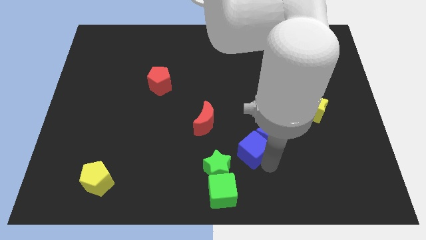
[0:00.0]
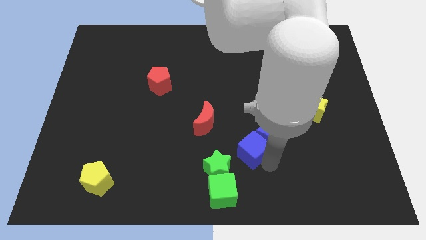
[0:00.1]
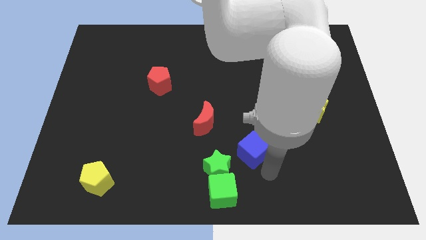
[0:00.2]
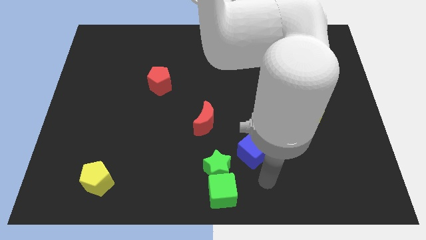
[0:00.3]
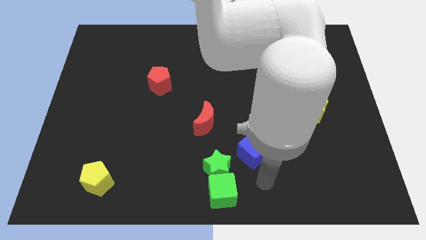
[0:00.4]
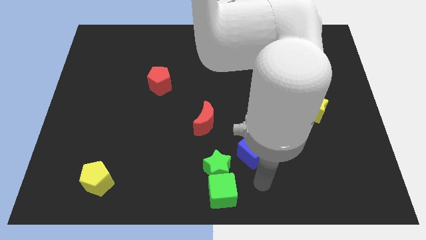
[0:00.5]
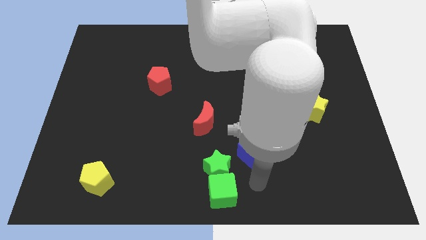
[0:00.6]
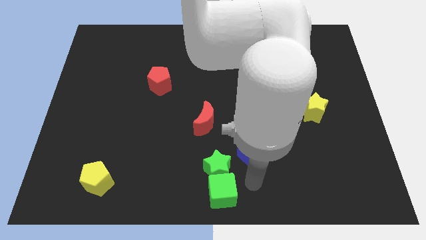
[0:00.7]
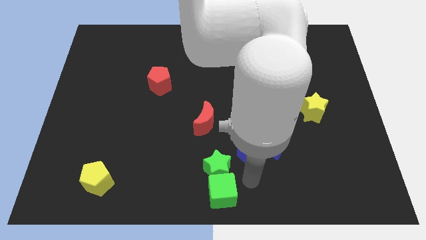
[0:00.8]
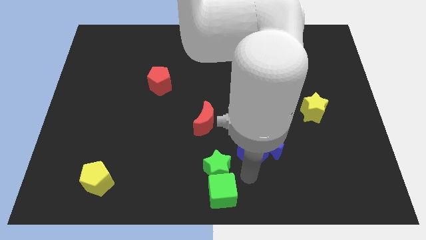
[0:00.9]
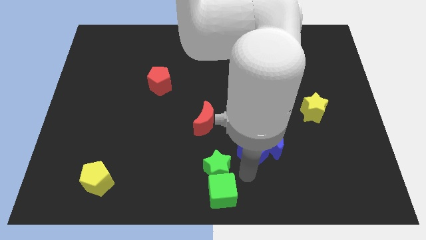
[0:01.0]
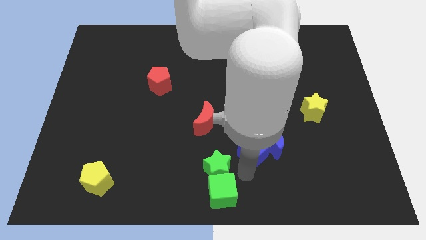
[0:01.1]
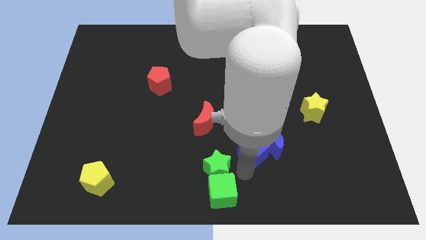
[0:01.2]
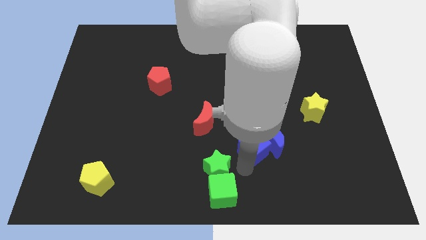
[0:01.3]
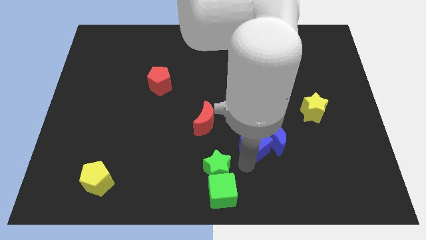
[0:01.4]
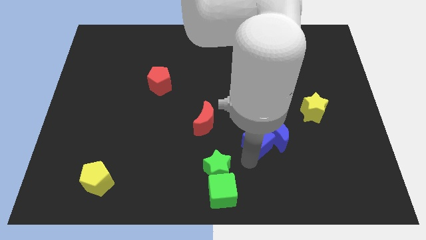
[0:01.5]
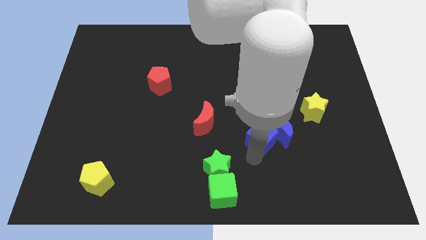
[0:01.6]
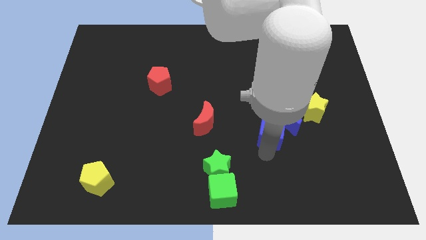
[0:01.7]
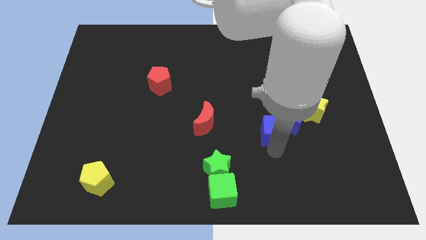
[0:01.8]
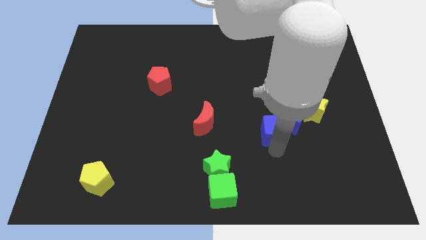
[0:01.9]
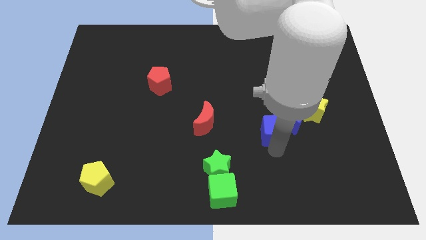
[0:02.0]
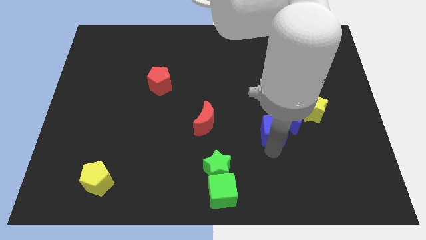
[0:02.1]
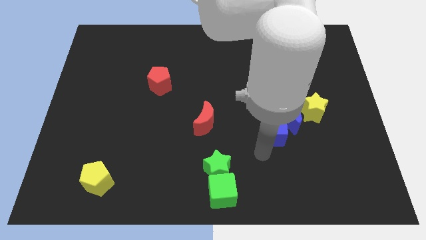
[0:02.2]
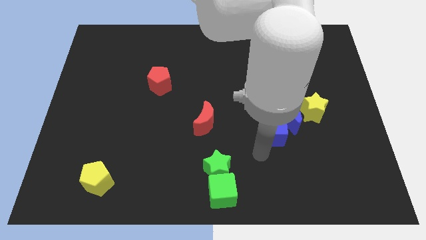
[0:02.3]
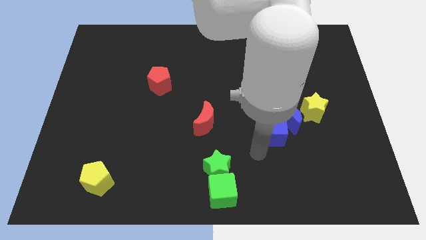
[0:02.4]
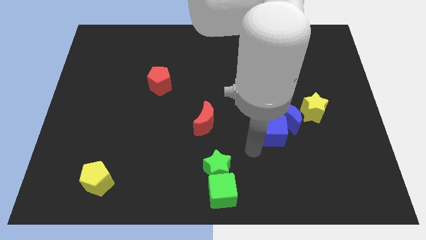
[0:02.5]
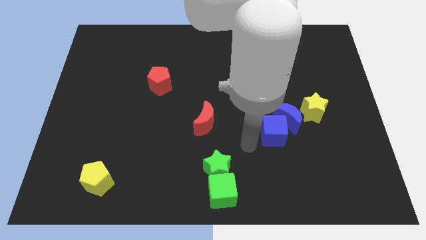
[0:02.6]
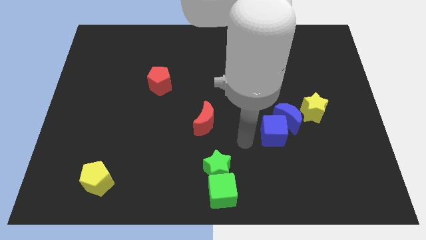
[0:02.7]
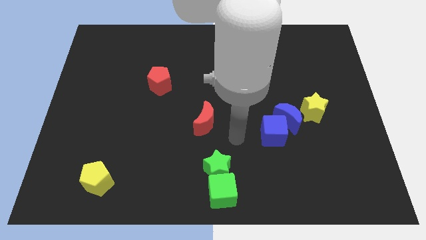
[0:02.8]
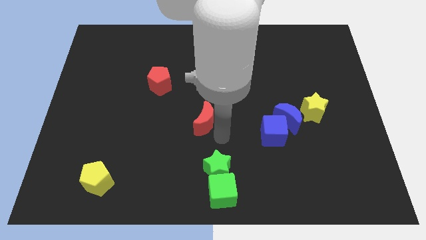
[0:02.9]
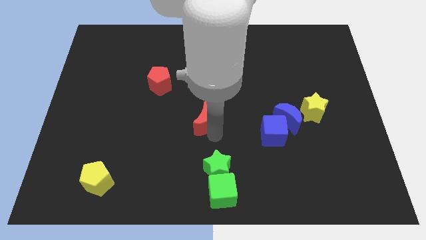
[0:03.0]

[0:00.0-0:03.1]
move the blue blocks together slightly towards the yellow star

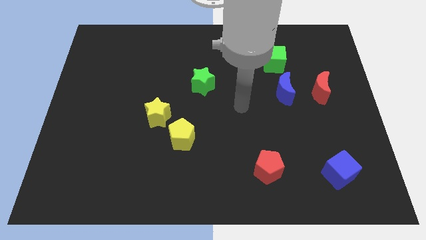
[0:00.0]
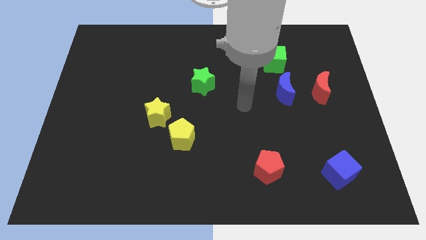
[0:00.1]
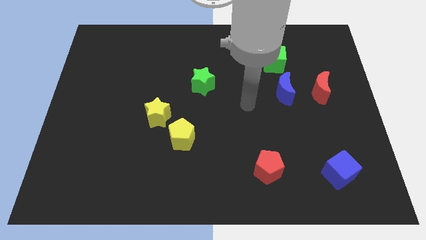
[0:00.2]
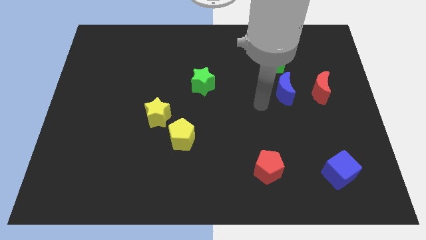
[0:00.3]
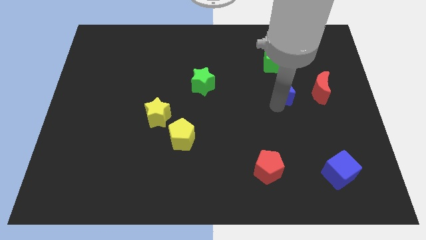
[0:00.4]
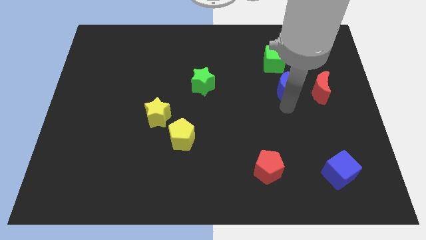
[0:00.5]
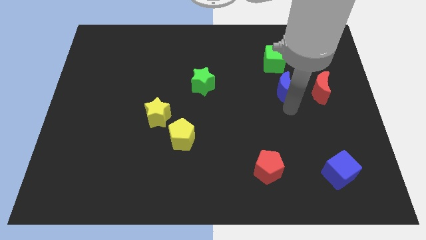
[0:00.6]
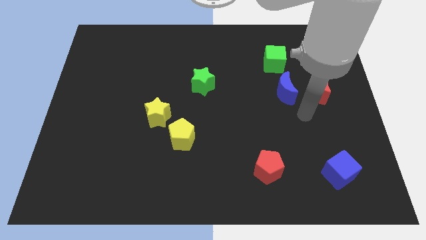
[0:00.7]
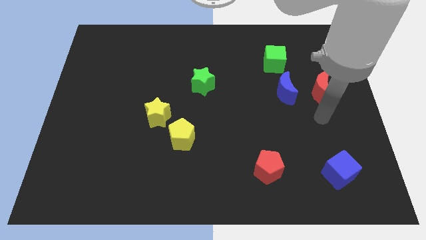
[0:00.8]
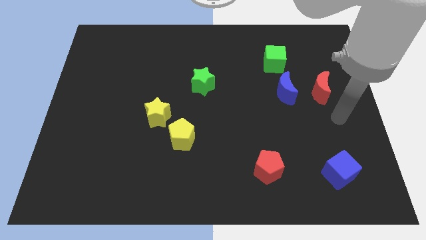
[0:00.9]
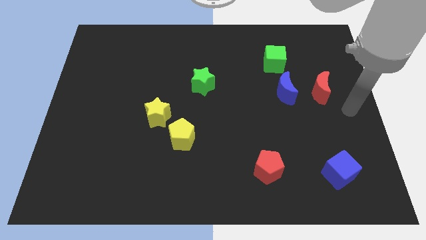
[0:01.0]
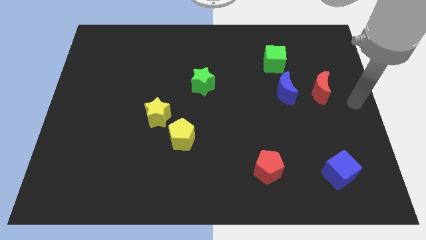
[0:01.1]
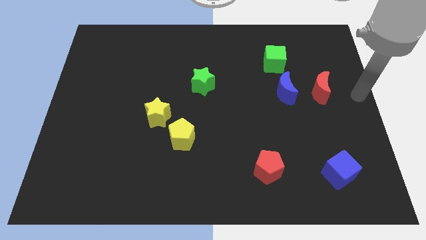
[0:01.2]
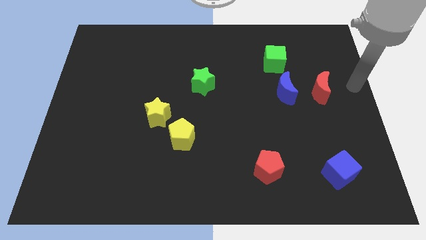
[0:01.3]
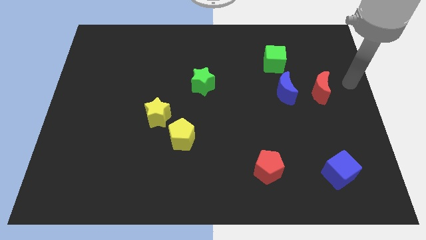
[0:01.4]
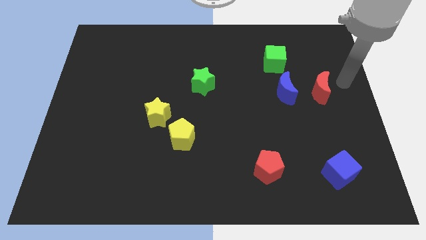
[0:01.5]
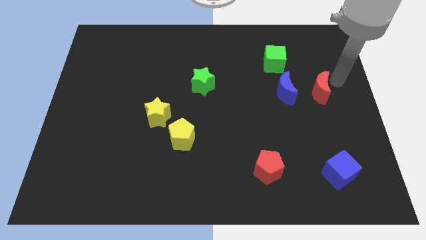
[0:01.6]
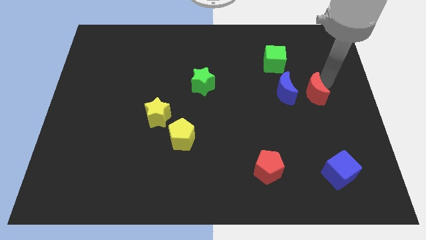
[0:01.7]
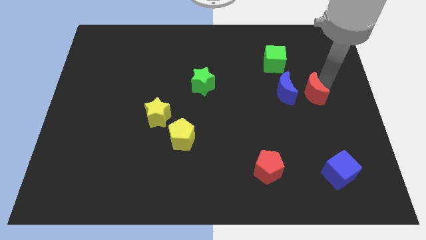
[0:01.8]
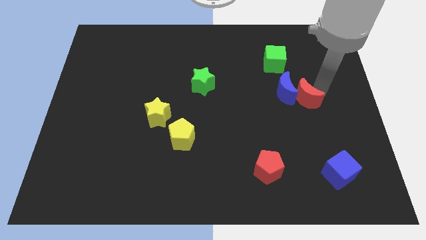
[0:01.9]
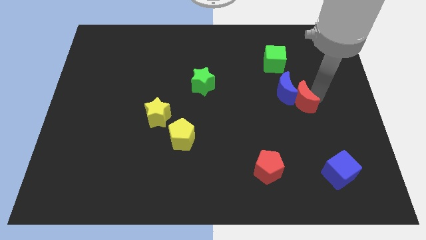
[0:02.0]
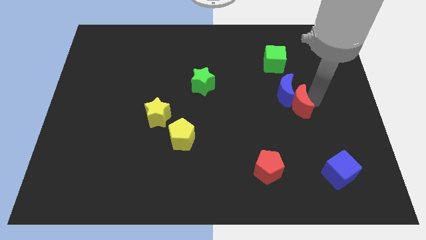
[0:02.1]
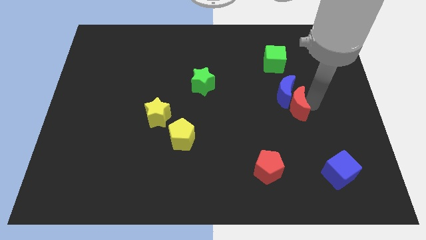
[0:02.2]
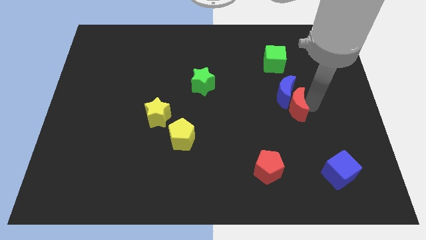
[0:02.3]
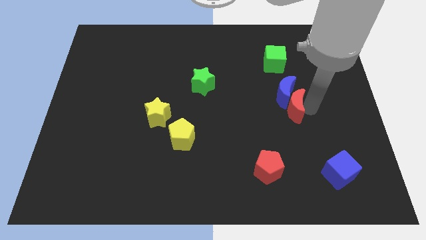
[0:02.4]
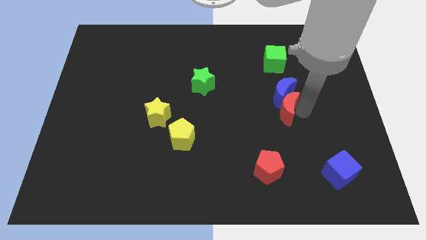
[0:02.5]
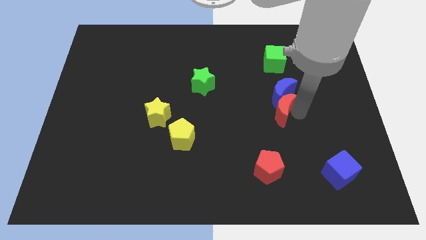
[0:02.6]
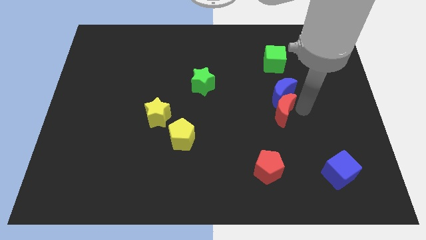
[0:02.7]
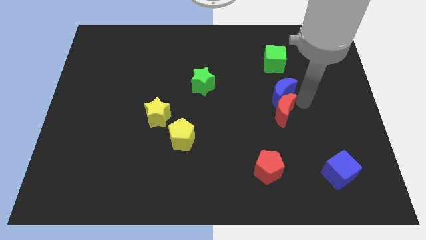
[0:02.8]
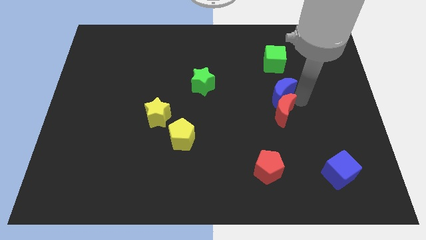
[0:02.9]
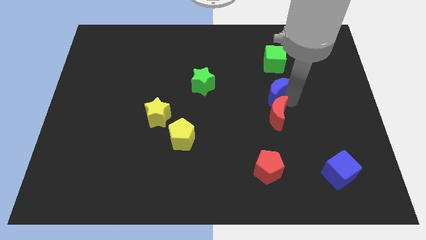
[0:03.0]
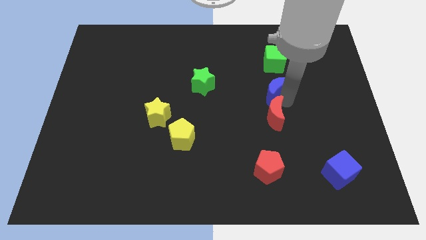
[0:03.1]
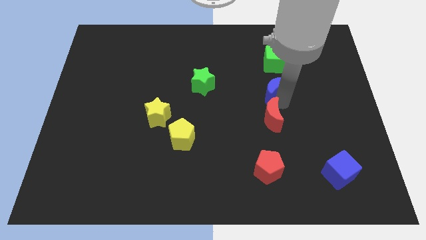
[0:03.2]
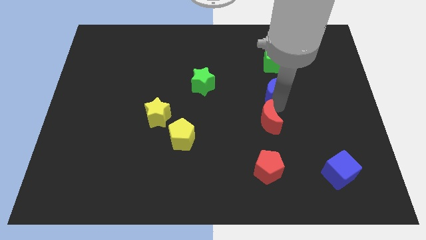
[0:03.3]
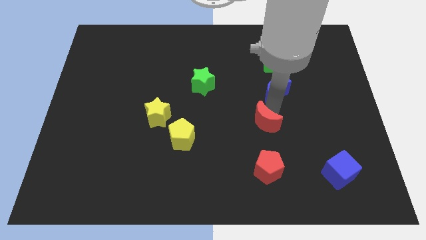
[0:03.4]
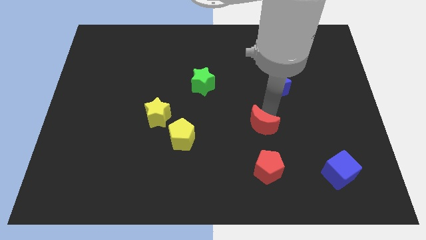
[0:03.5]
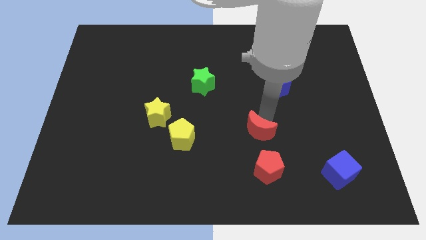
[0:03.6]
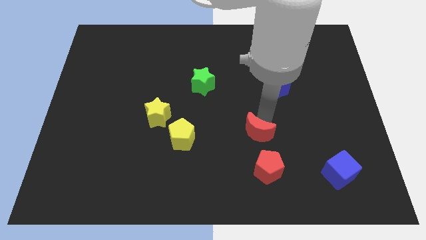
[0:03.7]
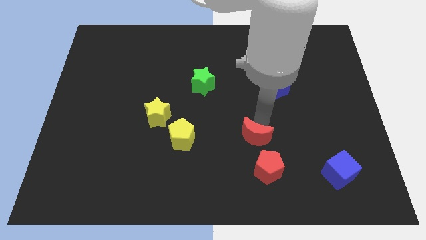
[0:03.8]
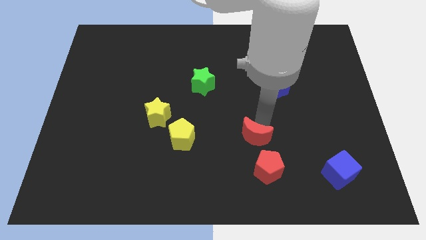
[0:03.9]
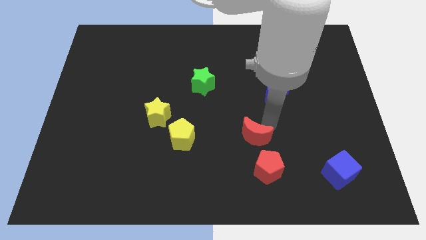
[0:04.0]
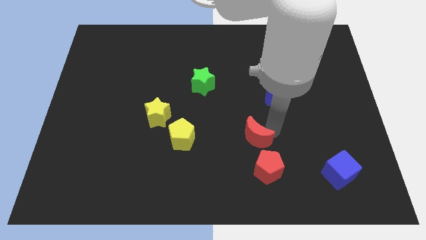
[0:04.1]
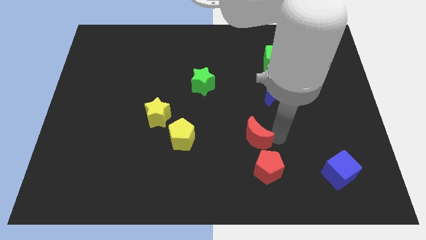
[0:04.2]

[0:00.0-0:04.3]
place the red crescent above the red pentagon

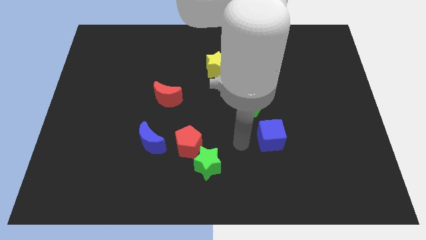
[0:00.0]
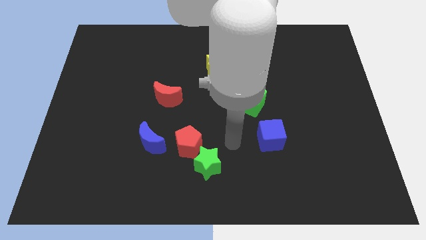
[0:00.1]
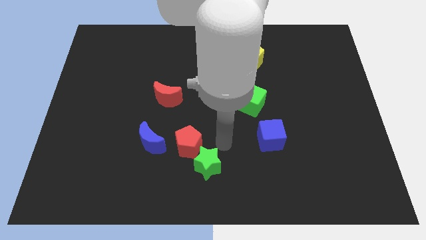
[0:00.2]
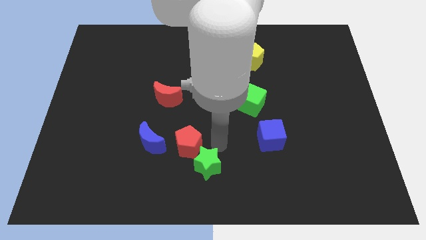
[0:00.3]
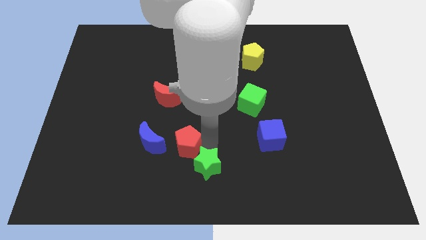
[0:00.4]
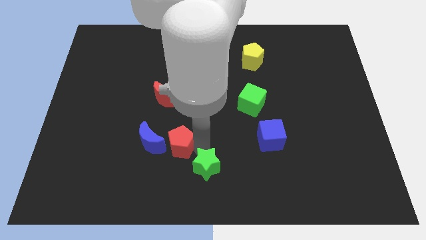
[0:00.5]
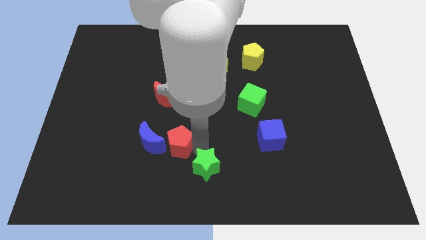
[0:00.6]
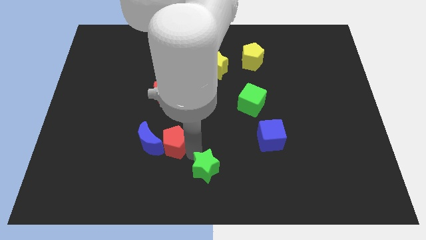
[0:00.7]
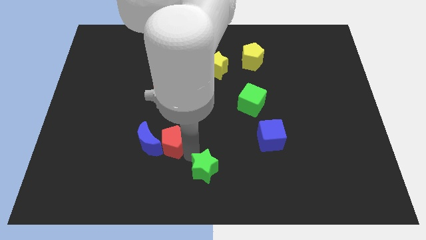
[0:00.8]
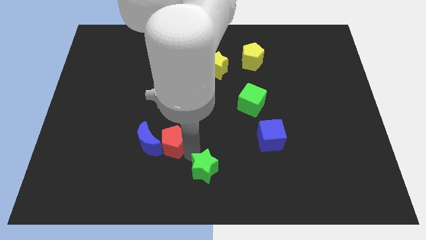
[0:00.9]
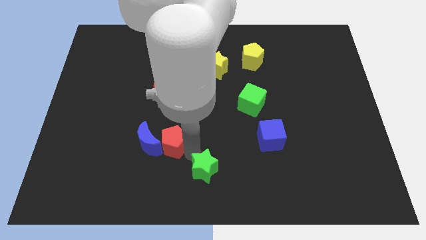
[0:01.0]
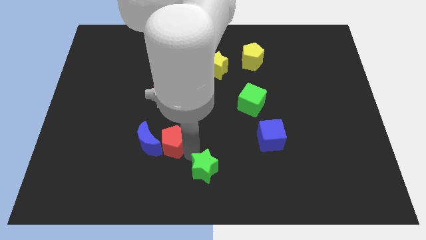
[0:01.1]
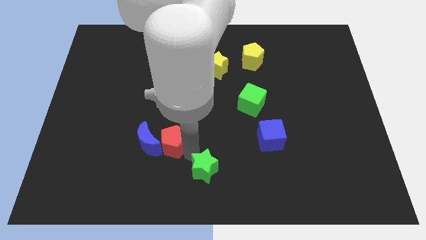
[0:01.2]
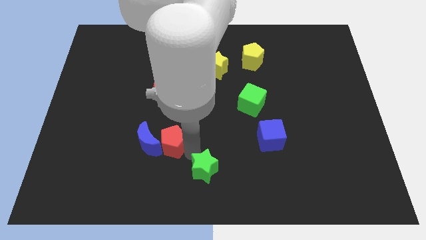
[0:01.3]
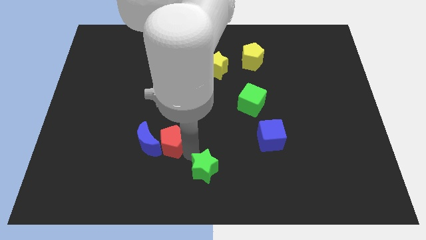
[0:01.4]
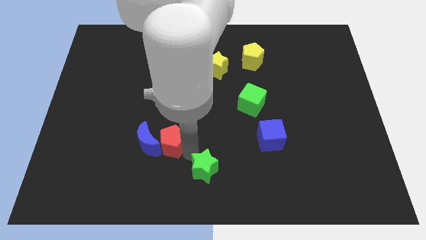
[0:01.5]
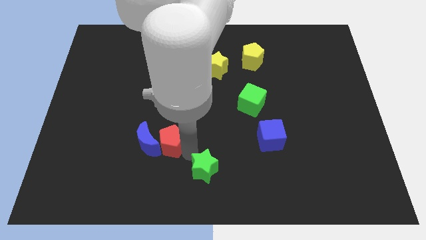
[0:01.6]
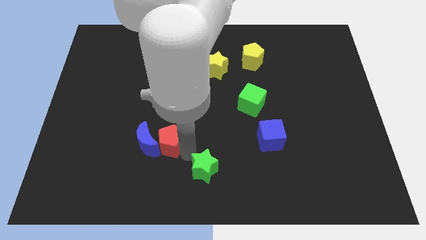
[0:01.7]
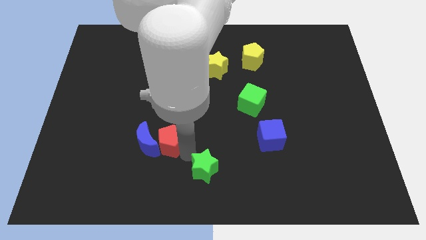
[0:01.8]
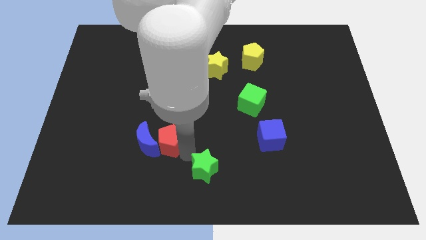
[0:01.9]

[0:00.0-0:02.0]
push the red pentagon into blue crescent
